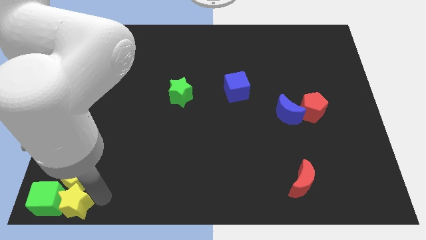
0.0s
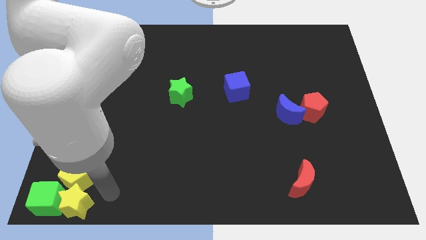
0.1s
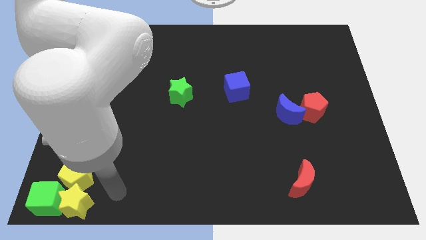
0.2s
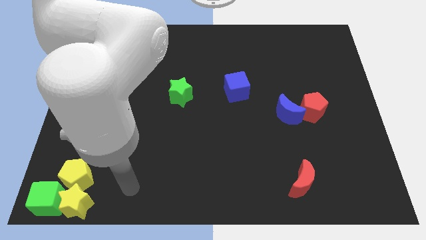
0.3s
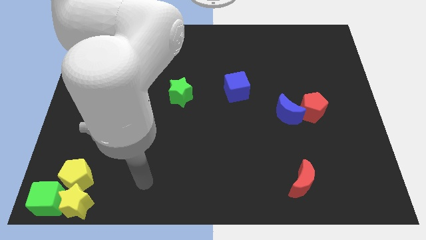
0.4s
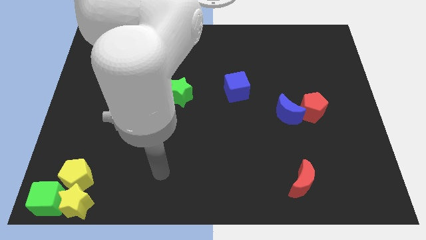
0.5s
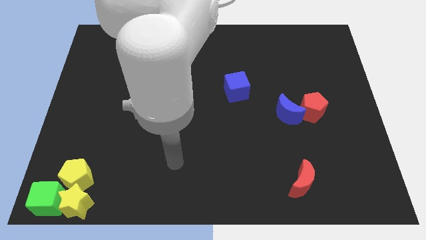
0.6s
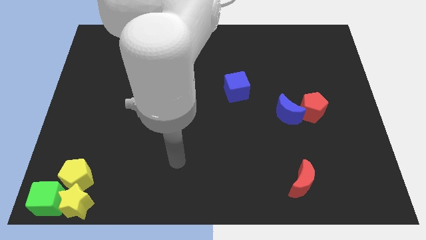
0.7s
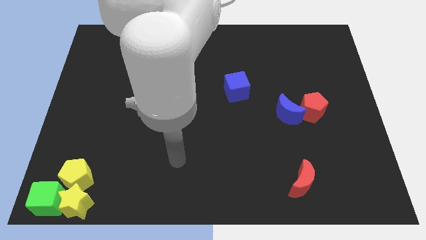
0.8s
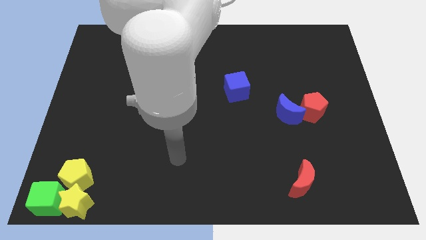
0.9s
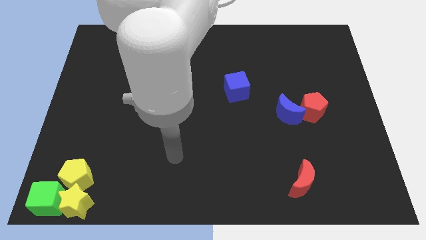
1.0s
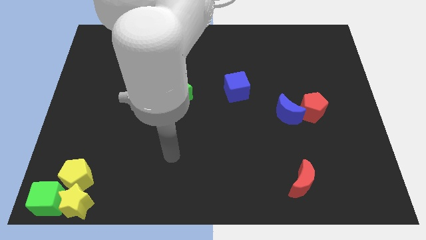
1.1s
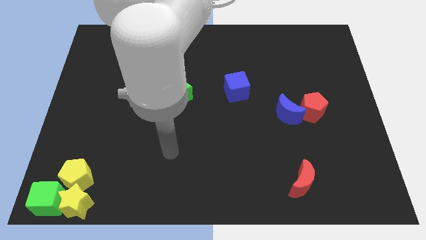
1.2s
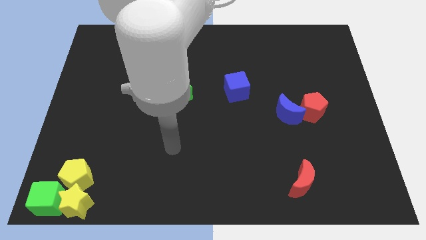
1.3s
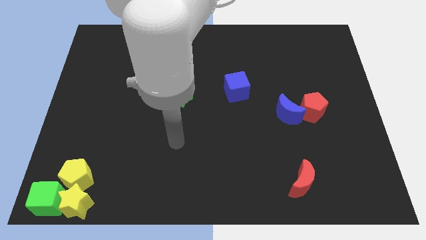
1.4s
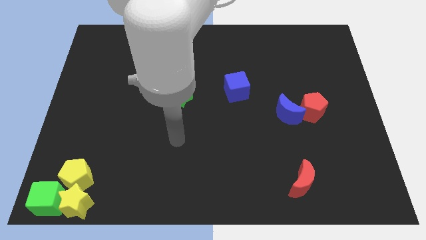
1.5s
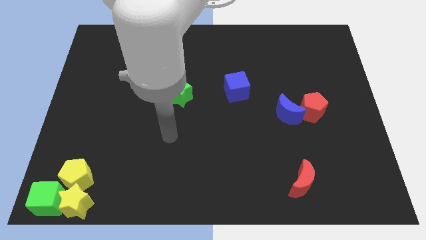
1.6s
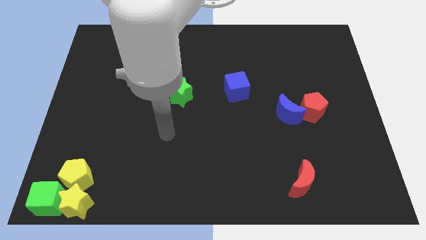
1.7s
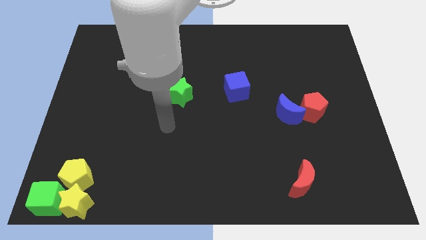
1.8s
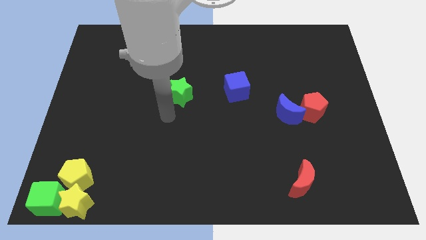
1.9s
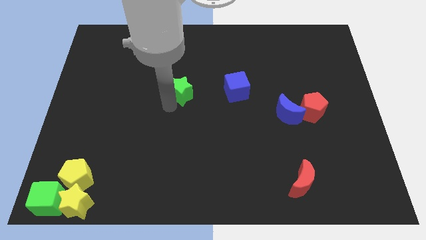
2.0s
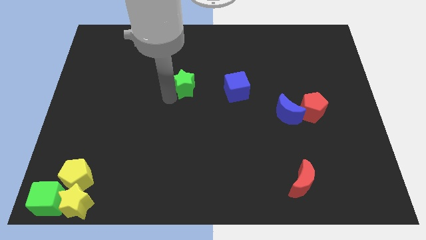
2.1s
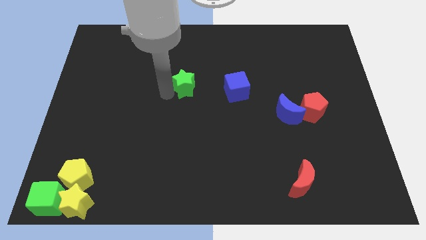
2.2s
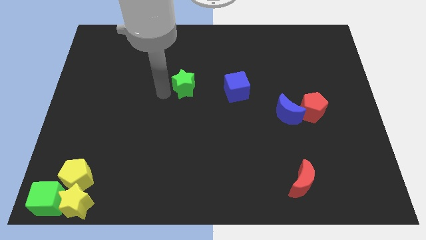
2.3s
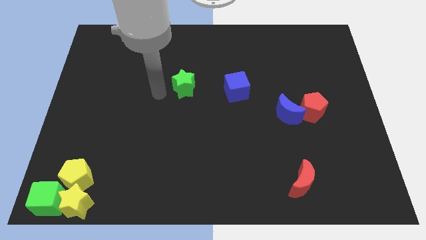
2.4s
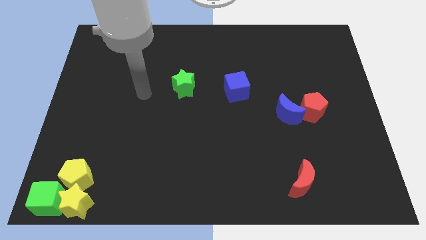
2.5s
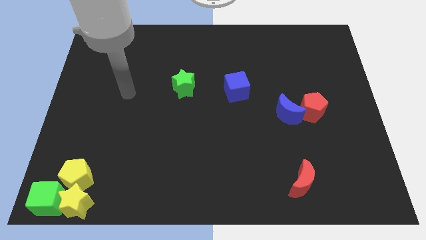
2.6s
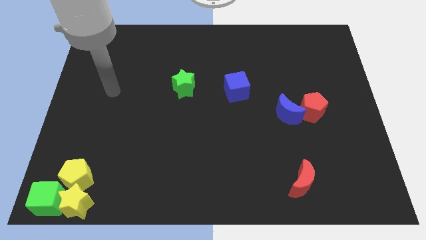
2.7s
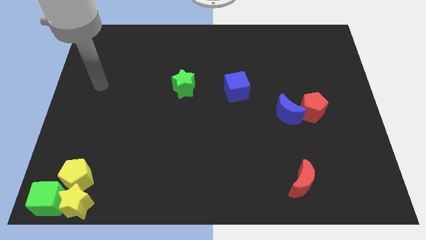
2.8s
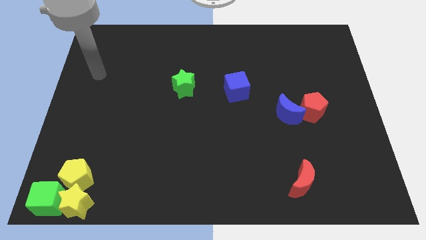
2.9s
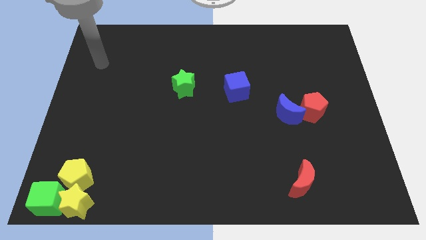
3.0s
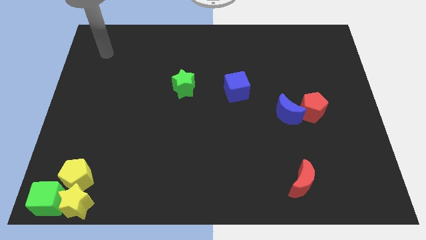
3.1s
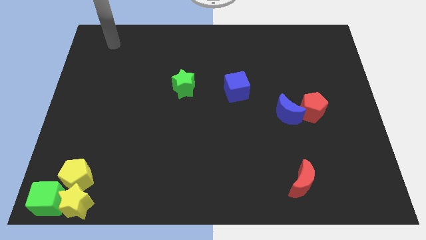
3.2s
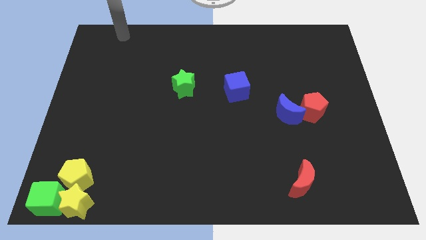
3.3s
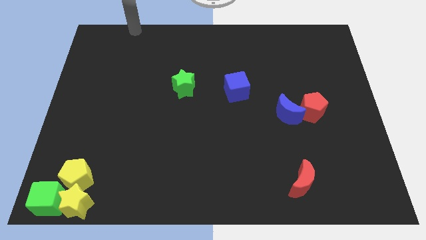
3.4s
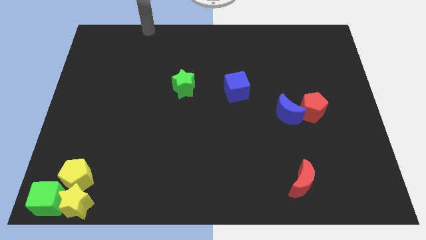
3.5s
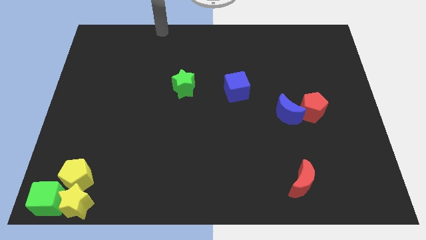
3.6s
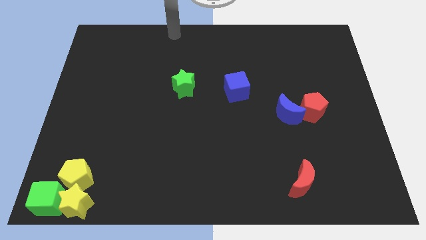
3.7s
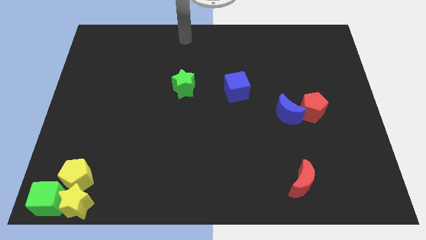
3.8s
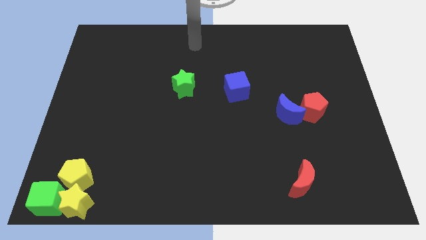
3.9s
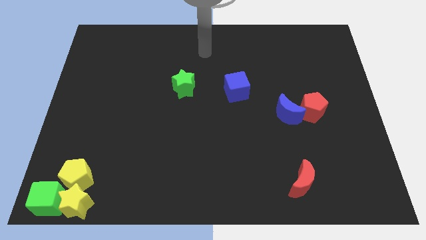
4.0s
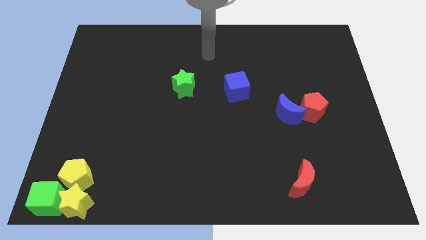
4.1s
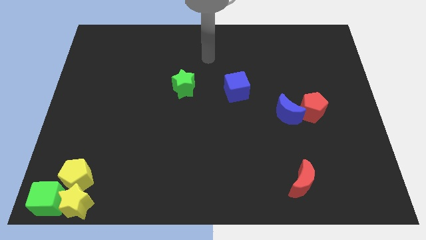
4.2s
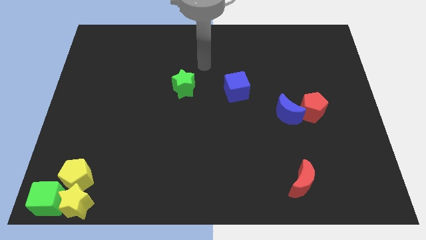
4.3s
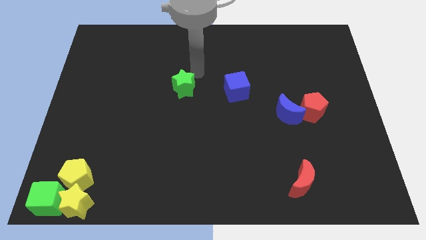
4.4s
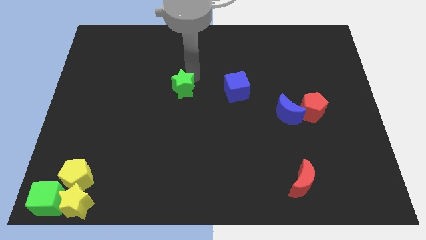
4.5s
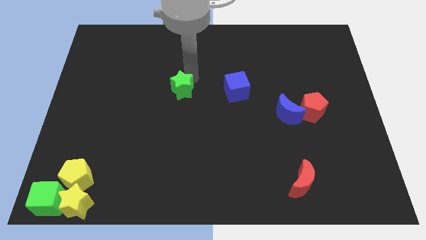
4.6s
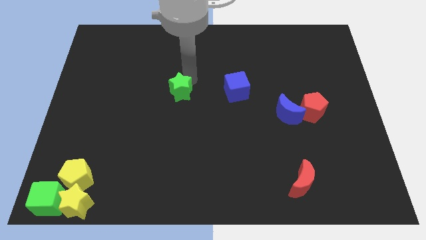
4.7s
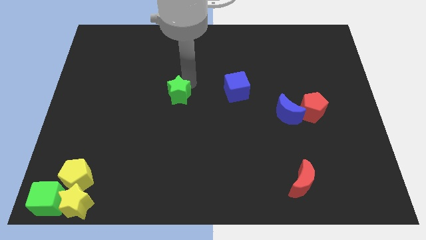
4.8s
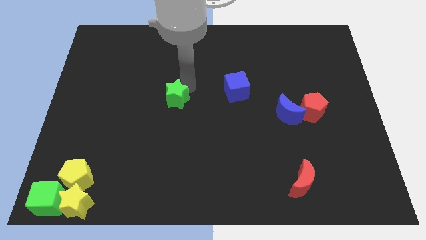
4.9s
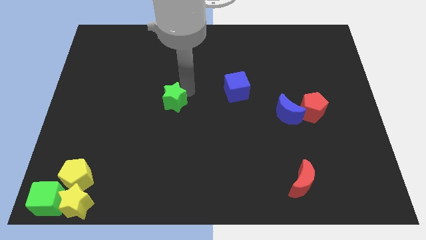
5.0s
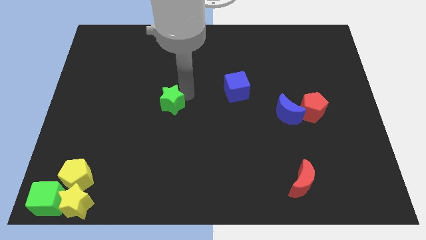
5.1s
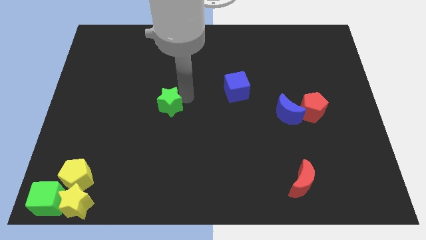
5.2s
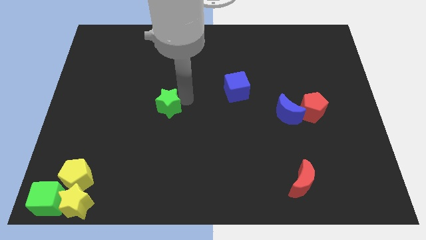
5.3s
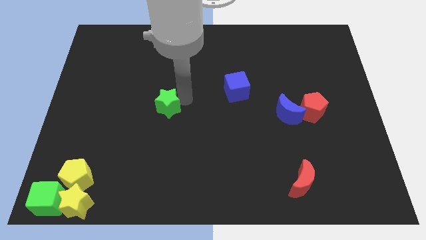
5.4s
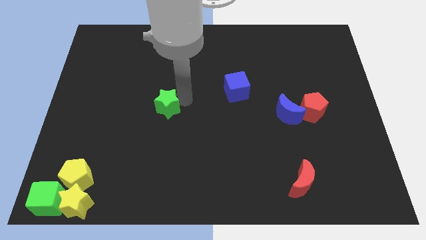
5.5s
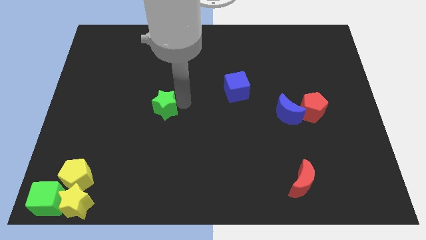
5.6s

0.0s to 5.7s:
slide the green star diagonally bottom left to the blue cube

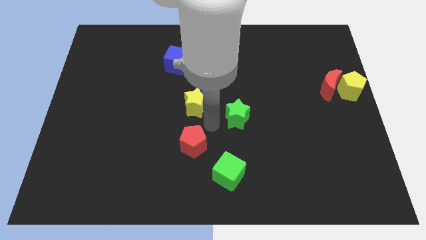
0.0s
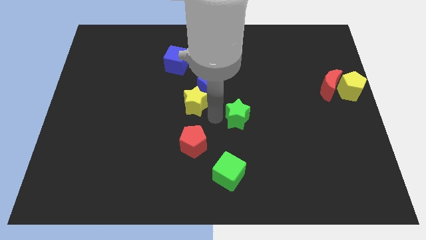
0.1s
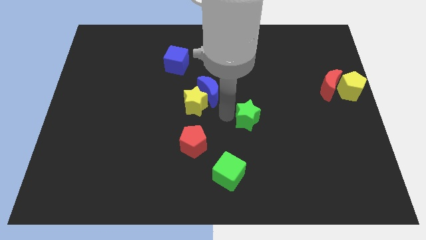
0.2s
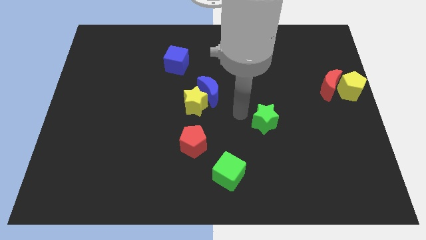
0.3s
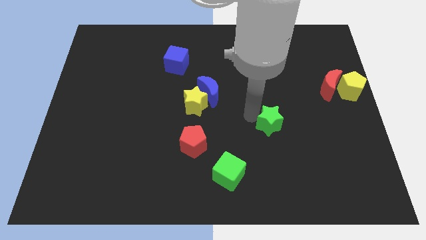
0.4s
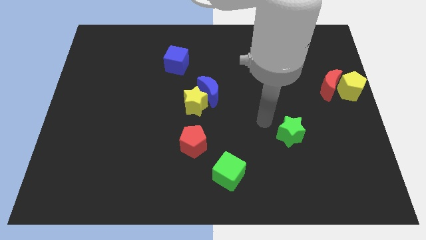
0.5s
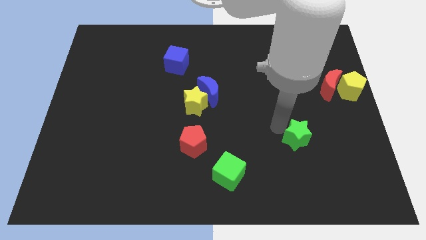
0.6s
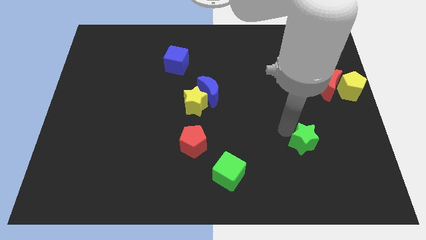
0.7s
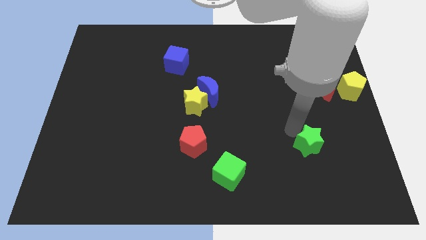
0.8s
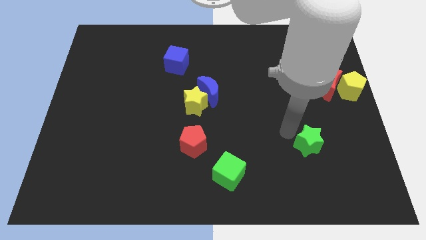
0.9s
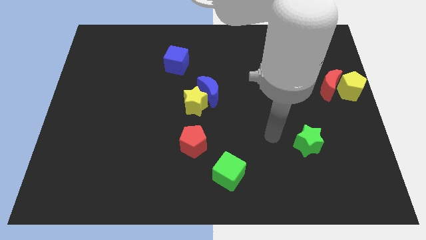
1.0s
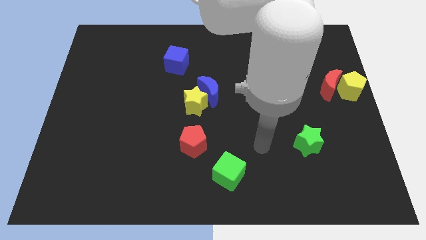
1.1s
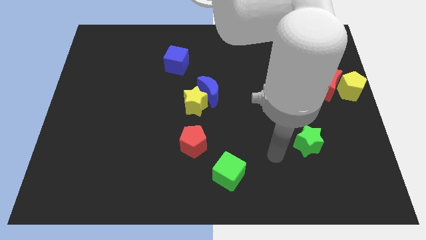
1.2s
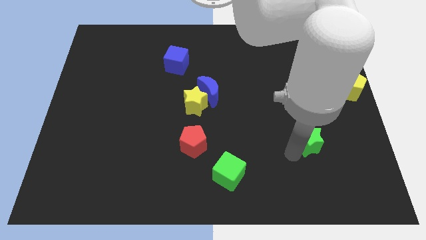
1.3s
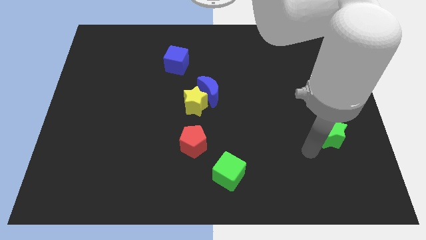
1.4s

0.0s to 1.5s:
move the green star to the bottom of the red crescent

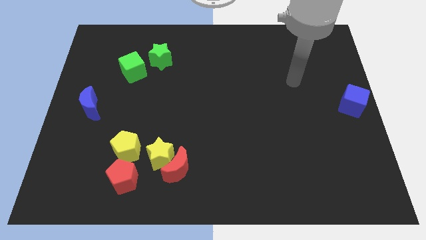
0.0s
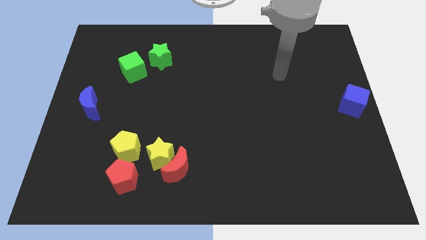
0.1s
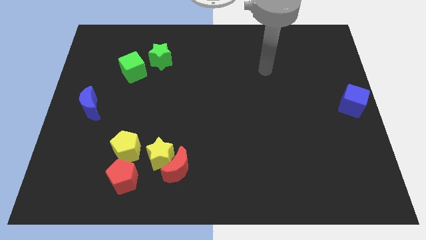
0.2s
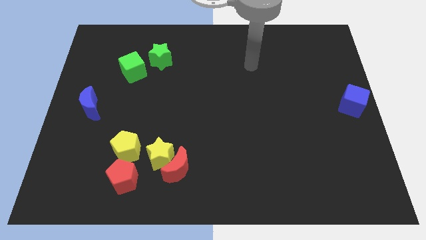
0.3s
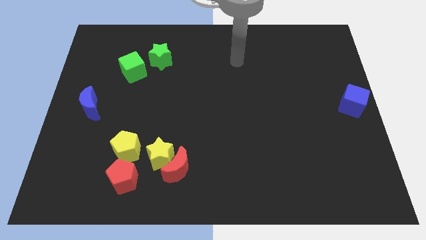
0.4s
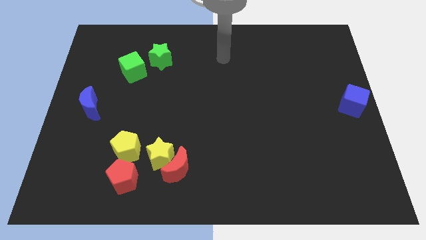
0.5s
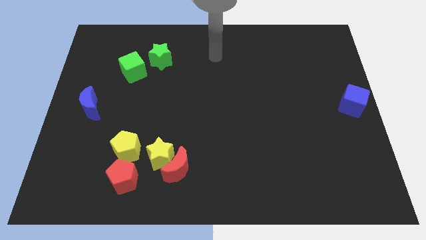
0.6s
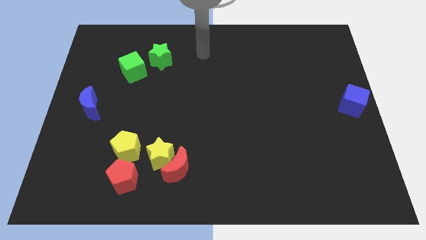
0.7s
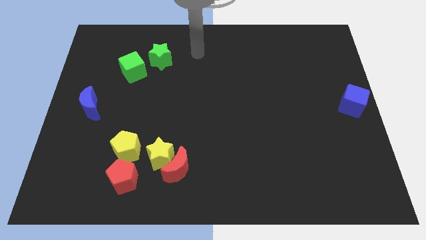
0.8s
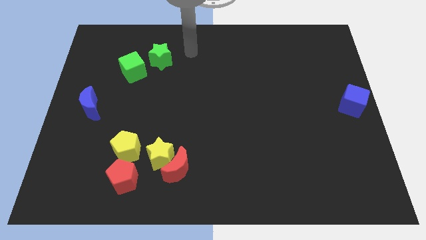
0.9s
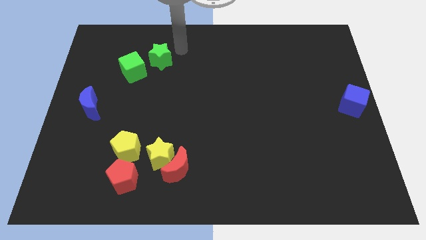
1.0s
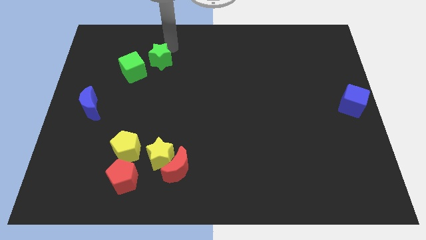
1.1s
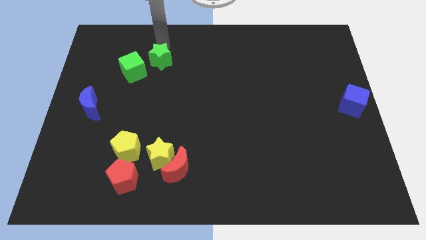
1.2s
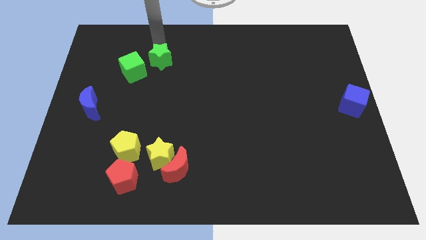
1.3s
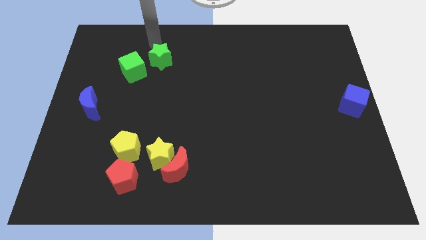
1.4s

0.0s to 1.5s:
place your arm at the top of the green star

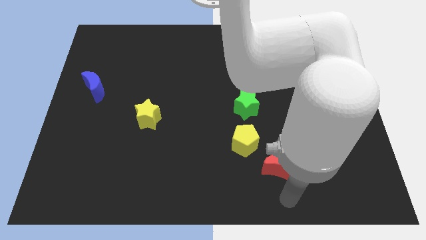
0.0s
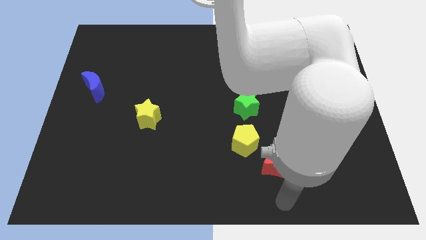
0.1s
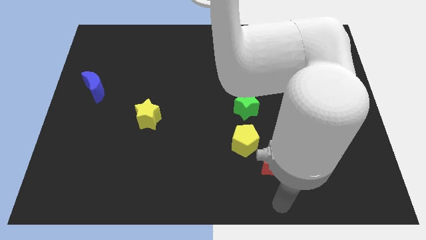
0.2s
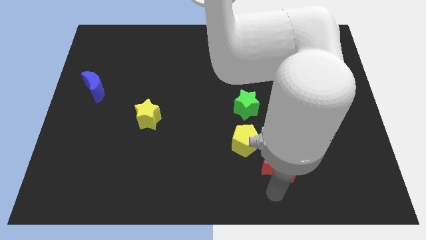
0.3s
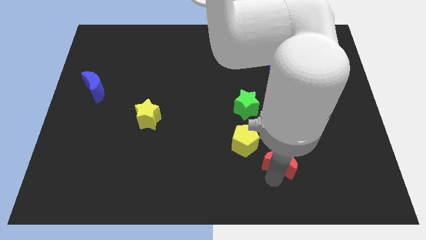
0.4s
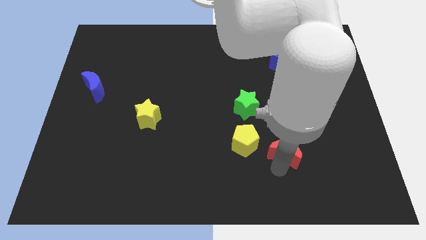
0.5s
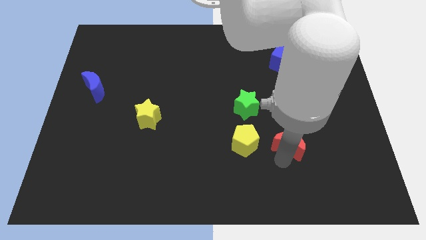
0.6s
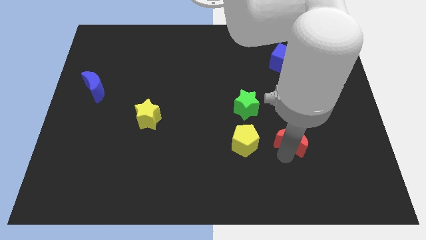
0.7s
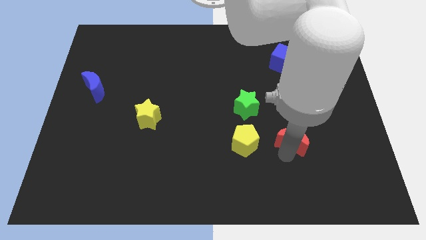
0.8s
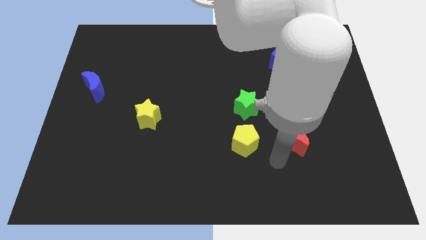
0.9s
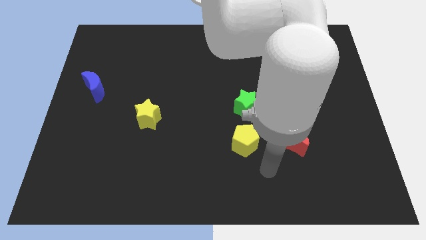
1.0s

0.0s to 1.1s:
move the red crescent slightly towards the right center of the board
